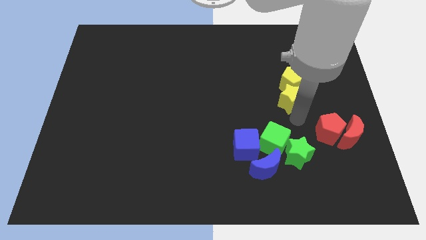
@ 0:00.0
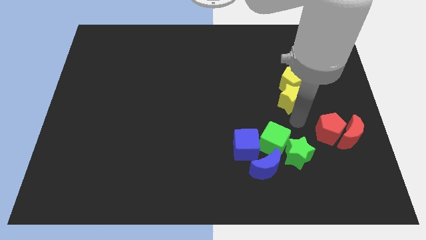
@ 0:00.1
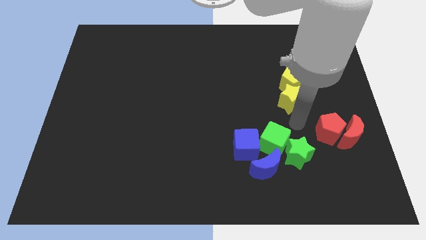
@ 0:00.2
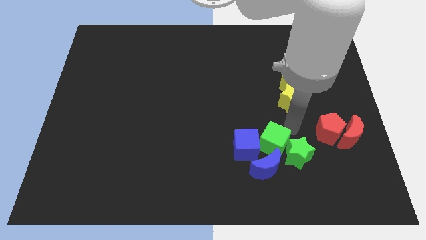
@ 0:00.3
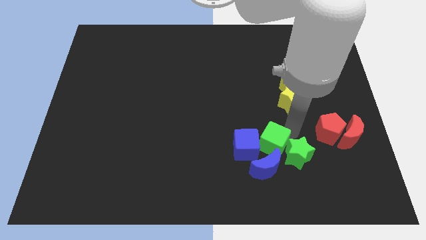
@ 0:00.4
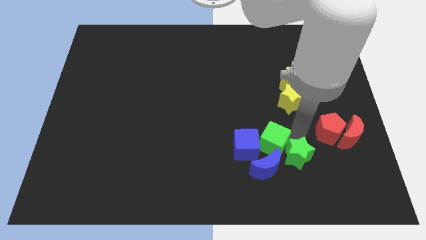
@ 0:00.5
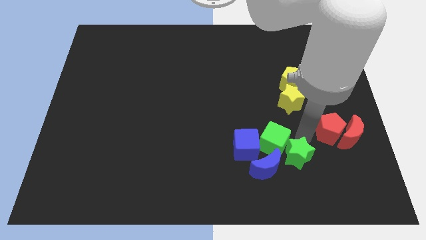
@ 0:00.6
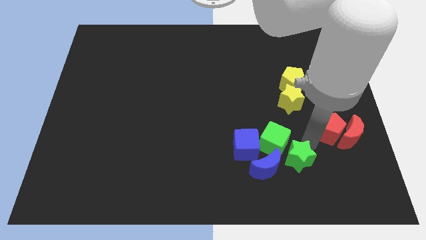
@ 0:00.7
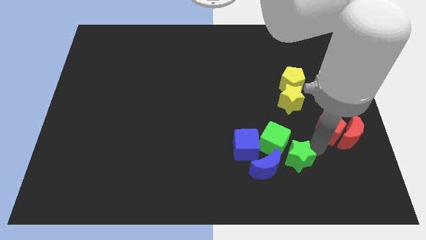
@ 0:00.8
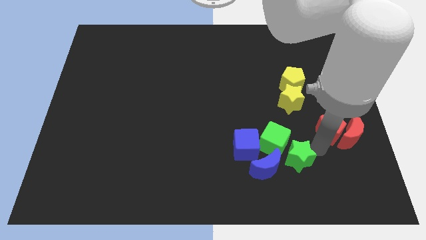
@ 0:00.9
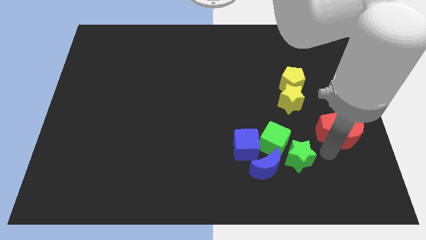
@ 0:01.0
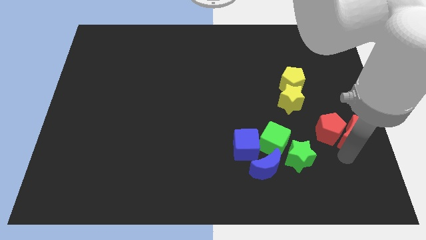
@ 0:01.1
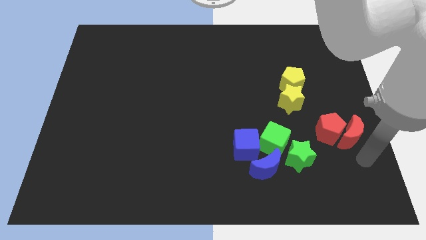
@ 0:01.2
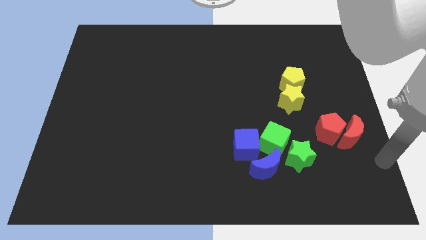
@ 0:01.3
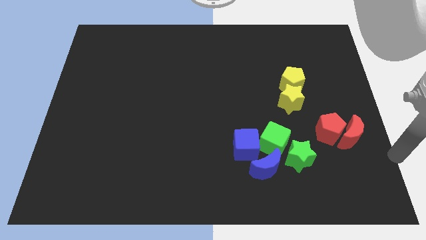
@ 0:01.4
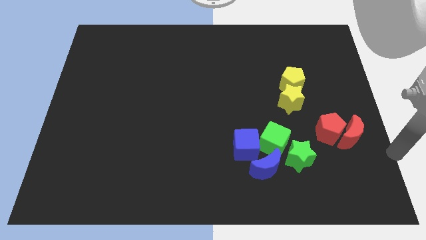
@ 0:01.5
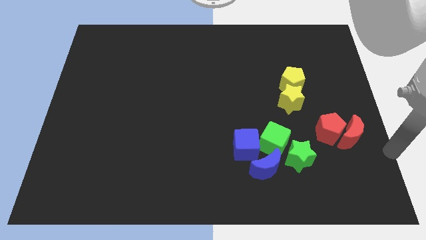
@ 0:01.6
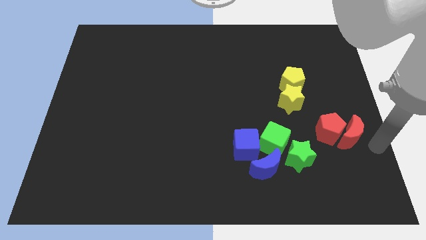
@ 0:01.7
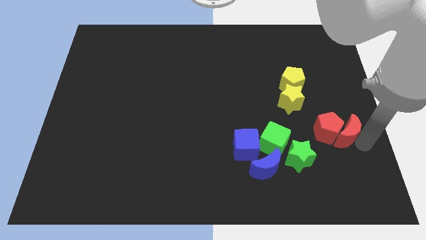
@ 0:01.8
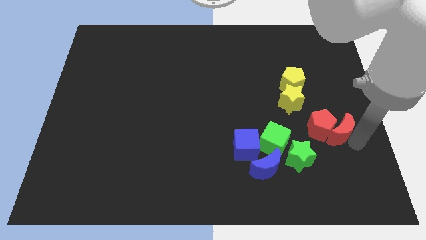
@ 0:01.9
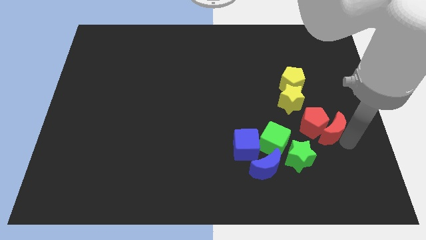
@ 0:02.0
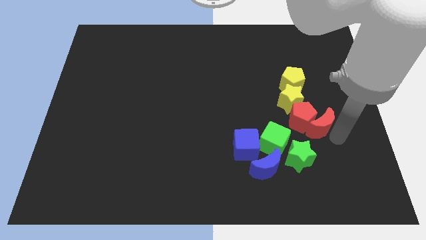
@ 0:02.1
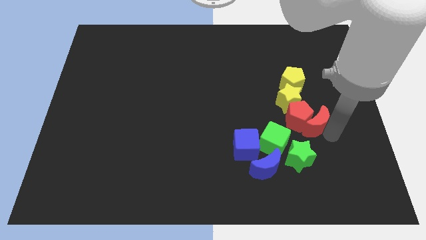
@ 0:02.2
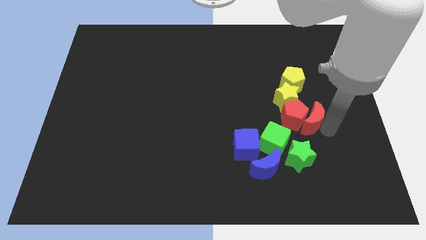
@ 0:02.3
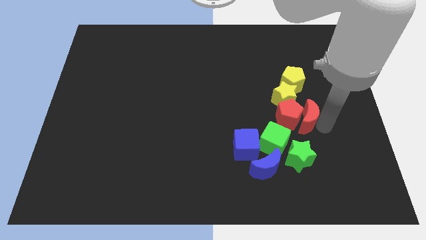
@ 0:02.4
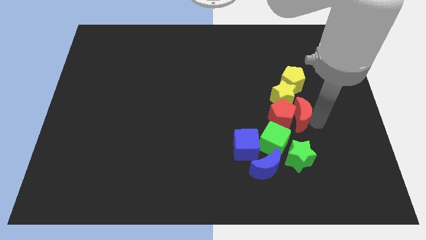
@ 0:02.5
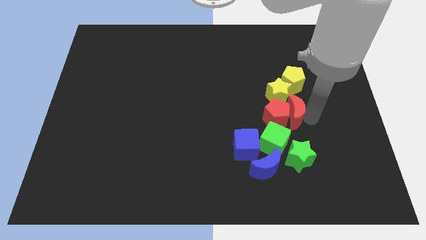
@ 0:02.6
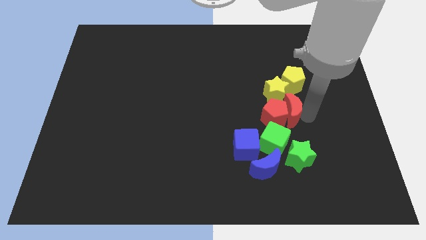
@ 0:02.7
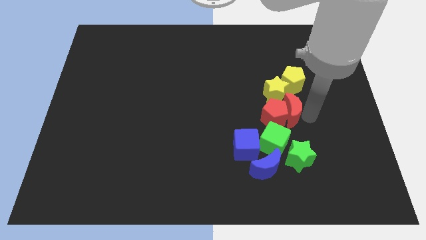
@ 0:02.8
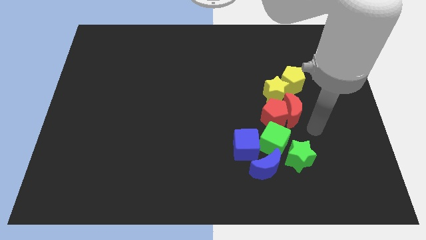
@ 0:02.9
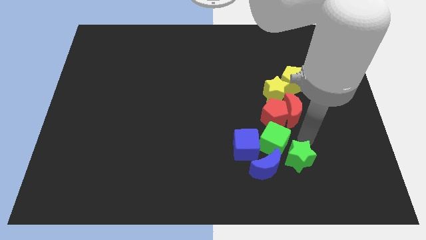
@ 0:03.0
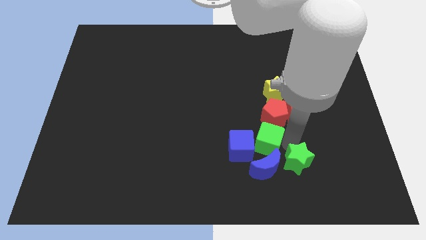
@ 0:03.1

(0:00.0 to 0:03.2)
move the red blocks slightly left

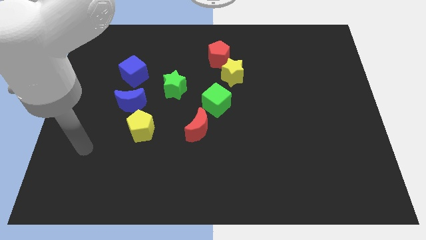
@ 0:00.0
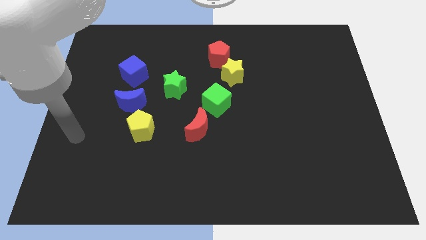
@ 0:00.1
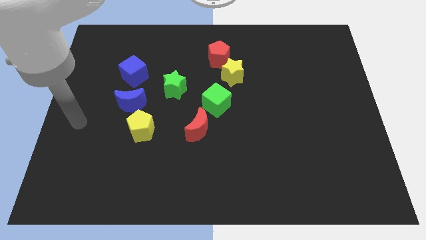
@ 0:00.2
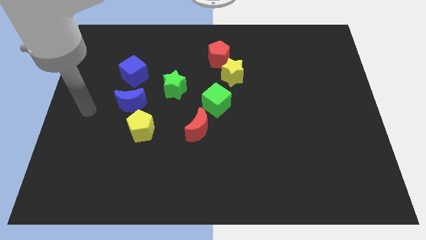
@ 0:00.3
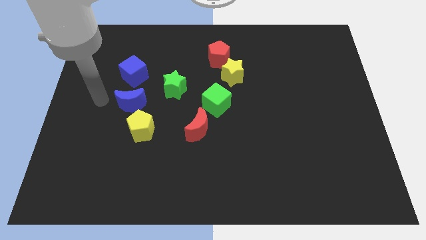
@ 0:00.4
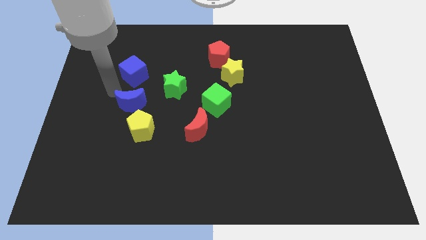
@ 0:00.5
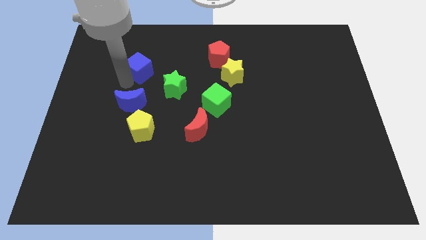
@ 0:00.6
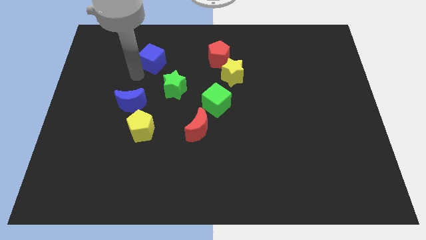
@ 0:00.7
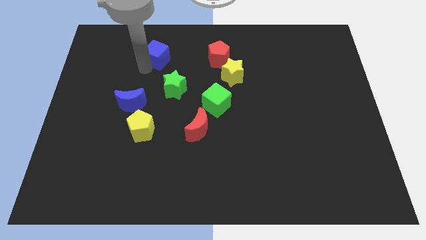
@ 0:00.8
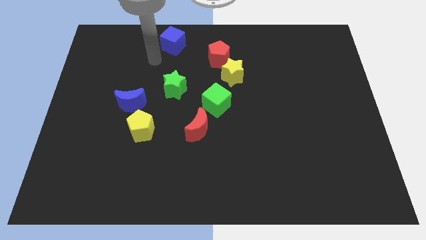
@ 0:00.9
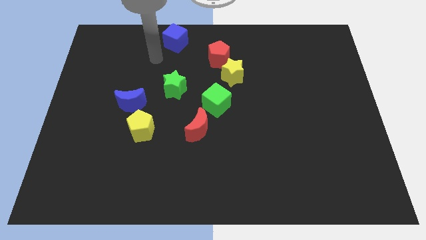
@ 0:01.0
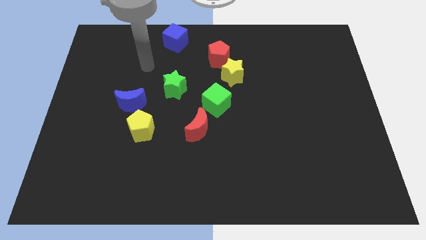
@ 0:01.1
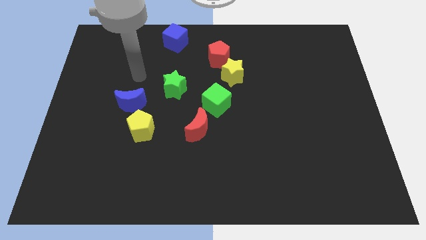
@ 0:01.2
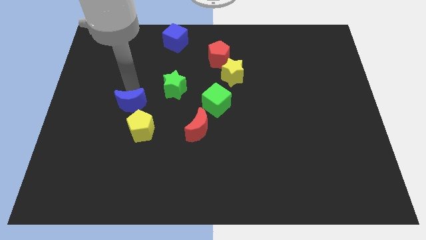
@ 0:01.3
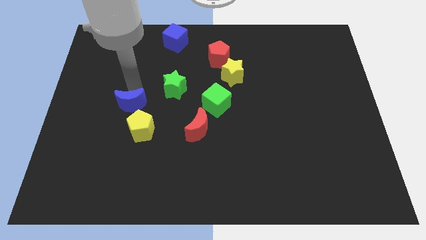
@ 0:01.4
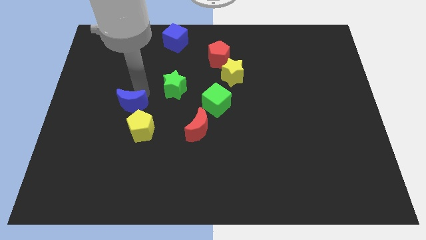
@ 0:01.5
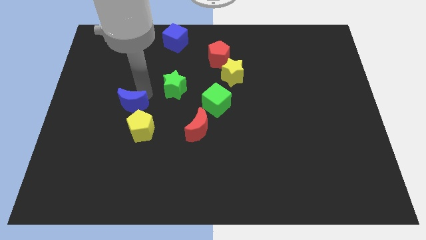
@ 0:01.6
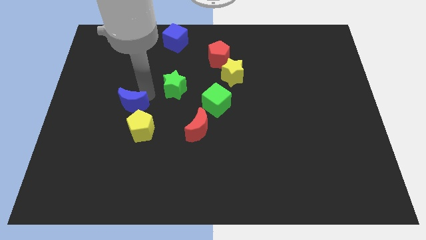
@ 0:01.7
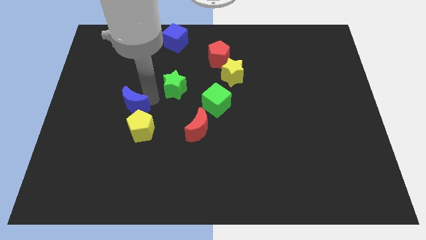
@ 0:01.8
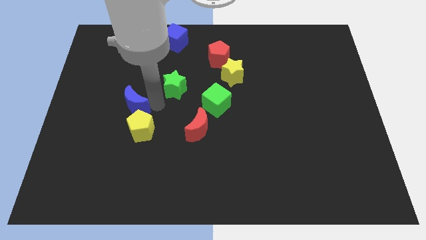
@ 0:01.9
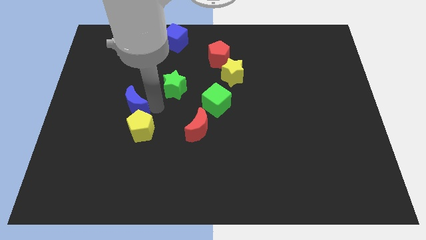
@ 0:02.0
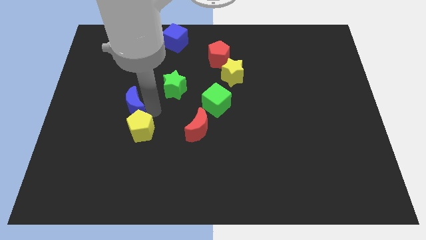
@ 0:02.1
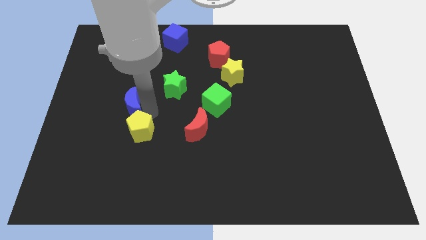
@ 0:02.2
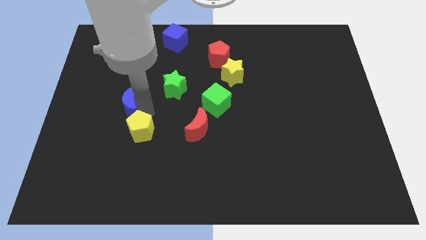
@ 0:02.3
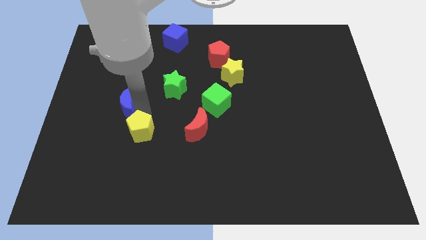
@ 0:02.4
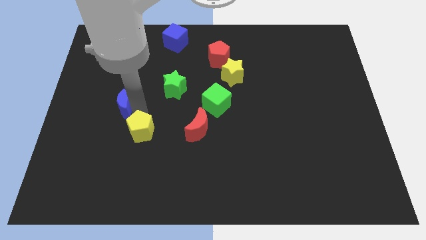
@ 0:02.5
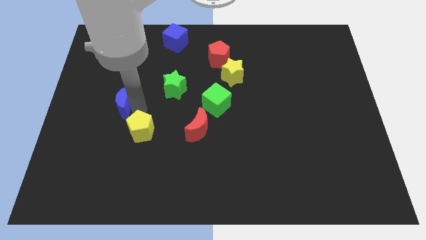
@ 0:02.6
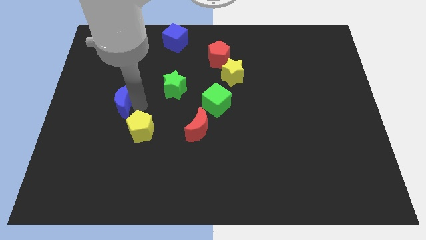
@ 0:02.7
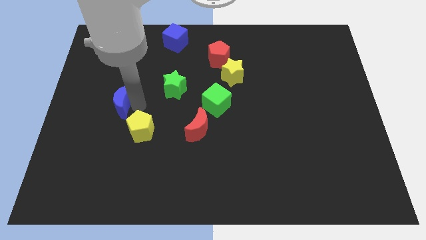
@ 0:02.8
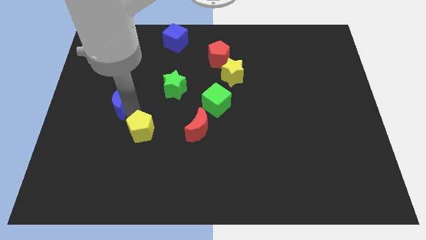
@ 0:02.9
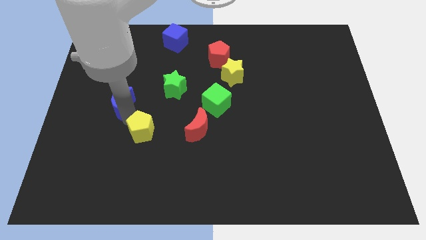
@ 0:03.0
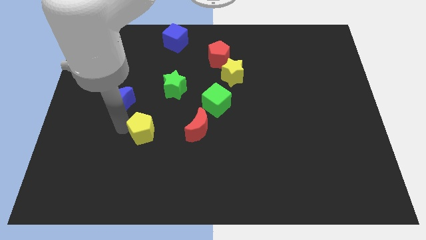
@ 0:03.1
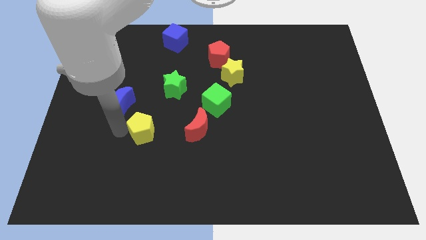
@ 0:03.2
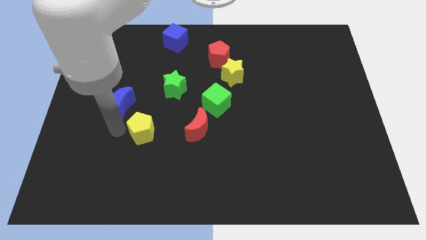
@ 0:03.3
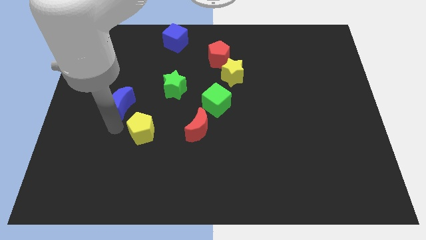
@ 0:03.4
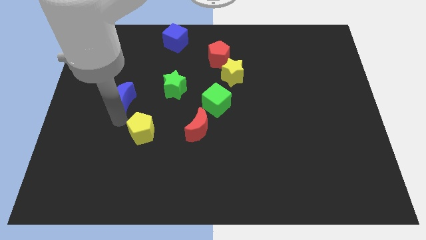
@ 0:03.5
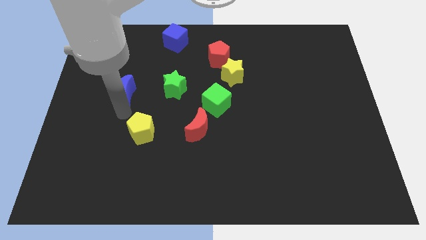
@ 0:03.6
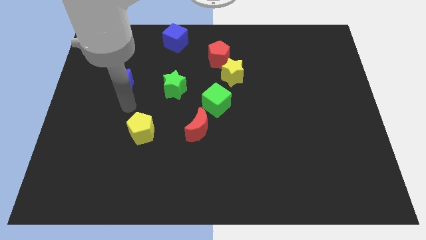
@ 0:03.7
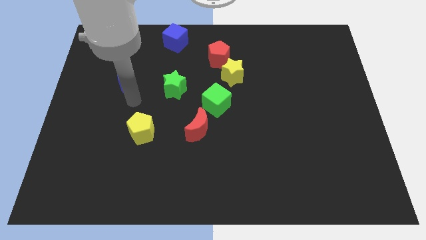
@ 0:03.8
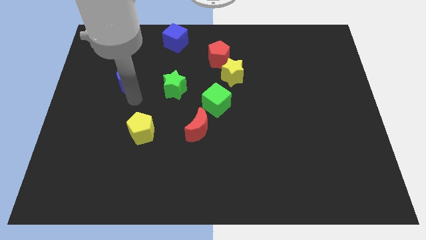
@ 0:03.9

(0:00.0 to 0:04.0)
arrange the group of blocks in the form circle

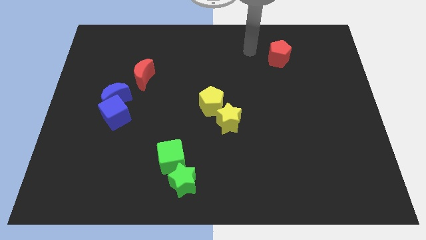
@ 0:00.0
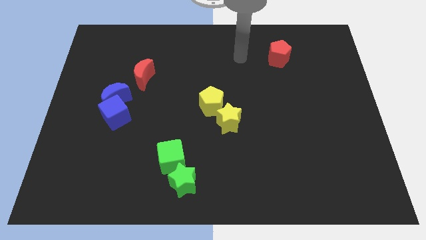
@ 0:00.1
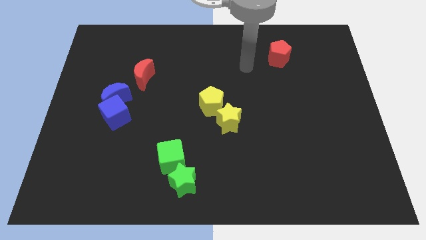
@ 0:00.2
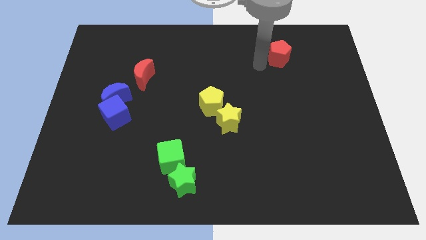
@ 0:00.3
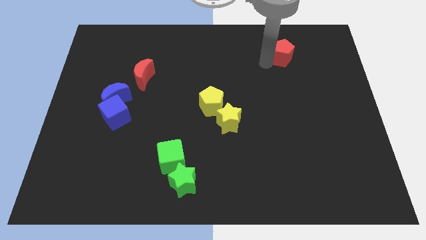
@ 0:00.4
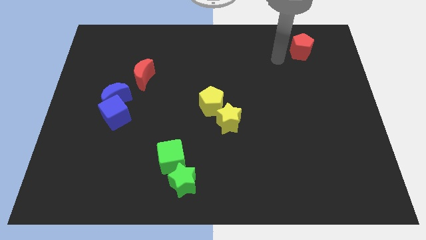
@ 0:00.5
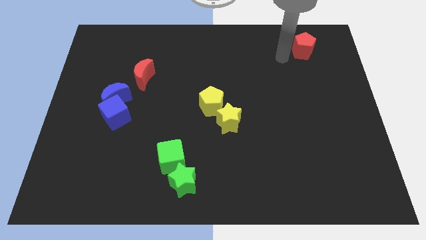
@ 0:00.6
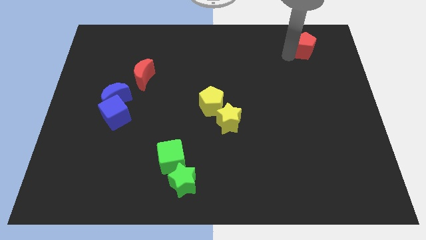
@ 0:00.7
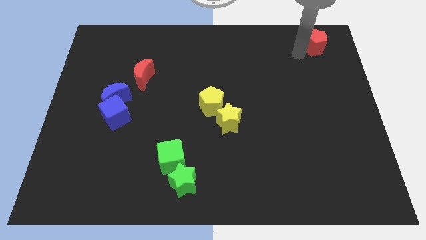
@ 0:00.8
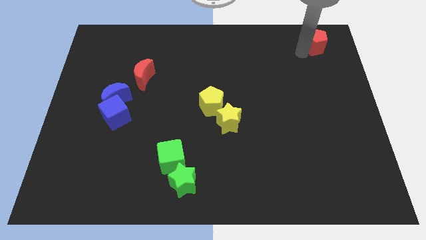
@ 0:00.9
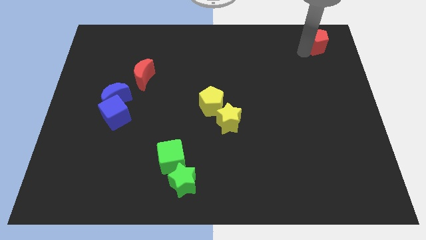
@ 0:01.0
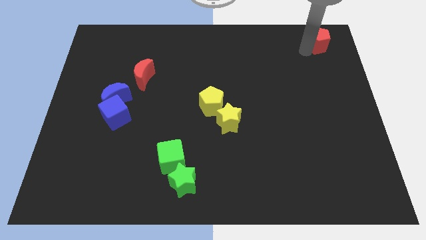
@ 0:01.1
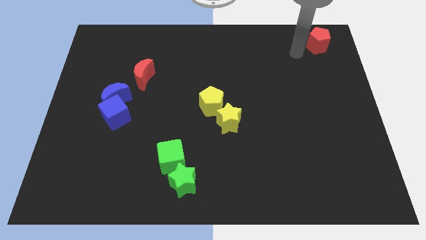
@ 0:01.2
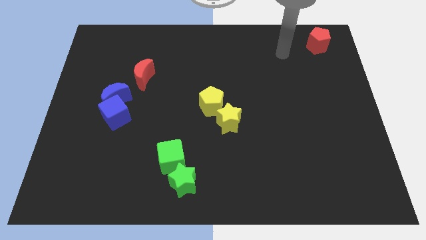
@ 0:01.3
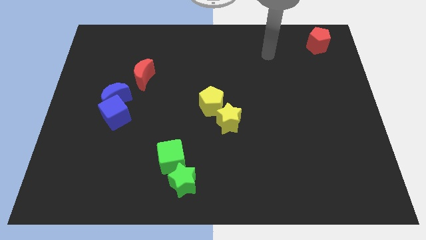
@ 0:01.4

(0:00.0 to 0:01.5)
push the red pentagon towards the top right corner
